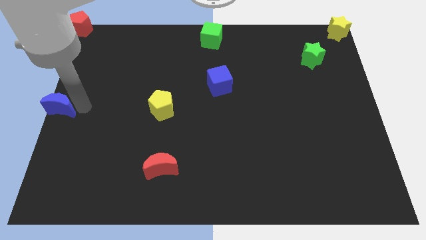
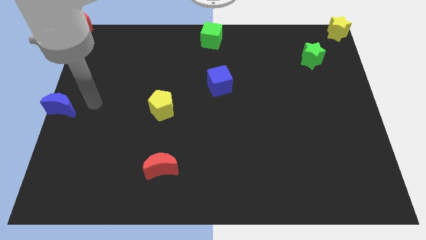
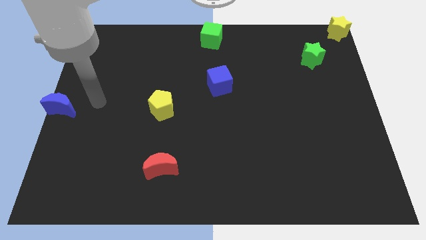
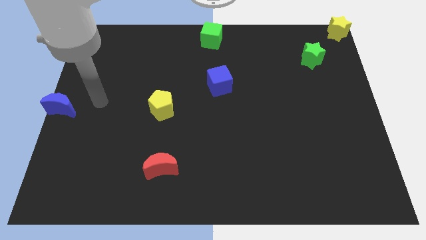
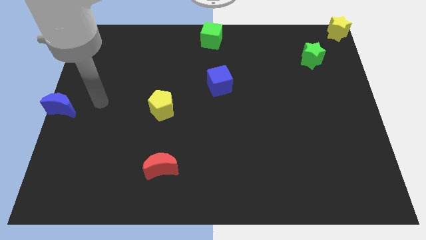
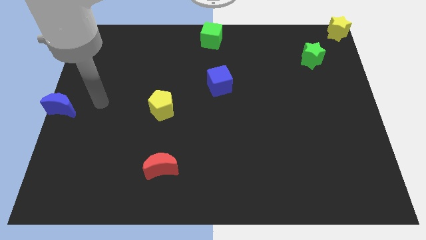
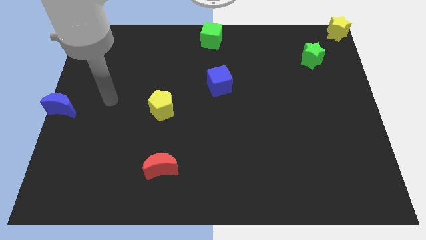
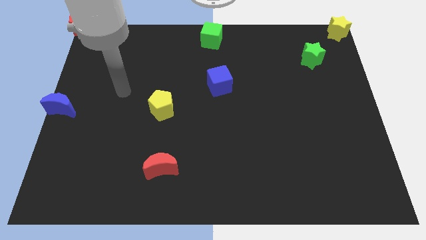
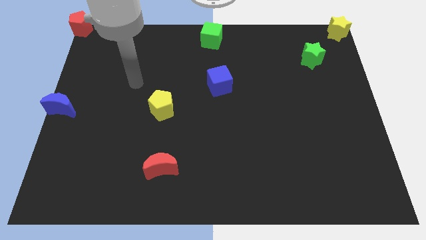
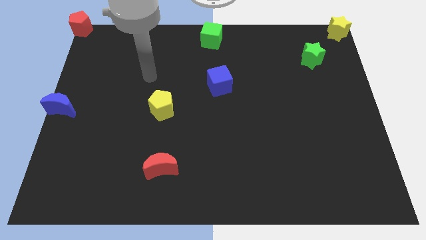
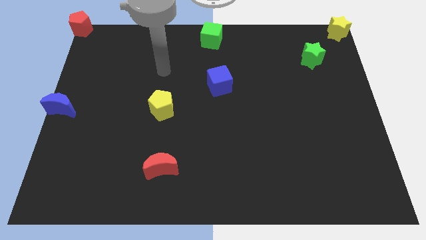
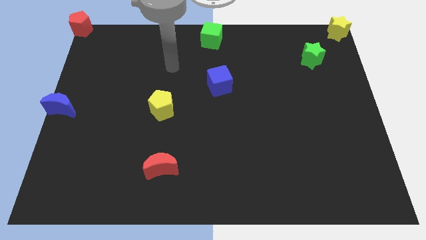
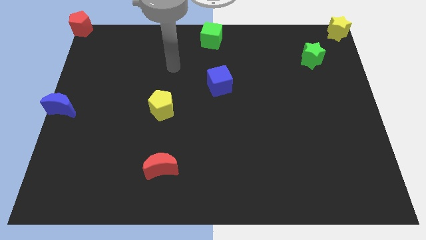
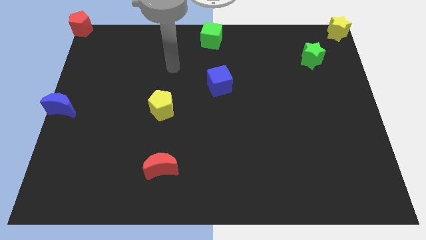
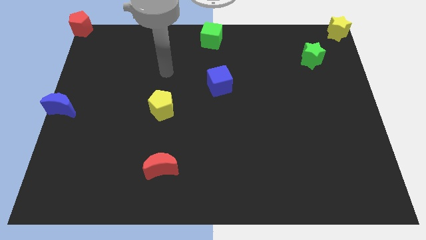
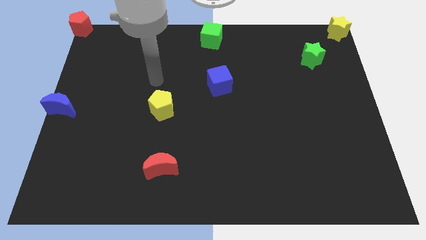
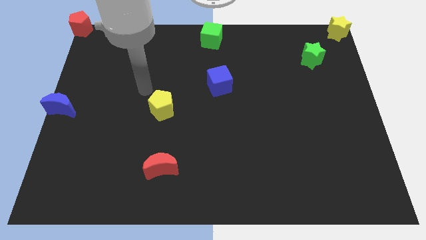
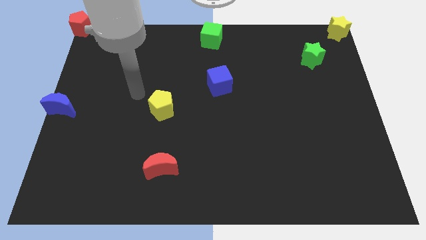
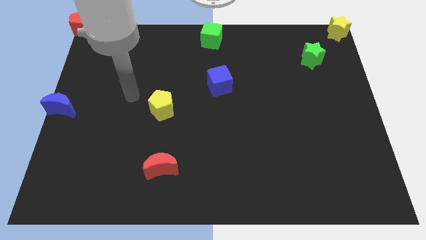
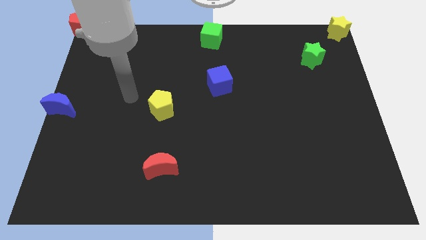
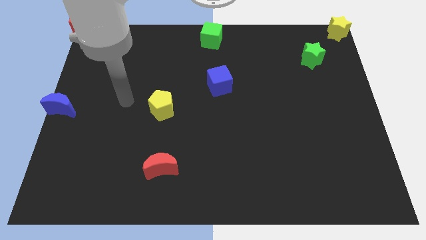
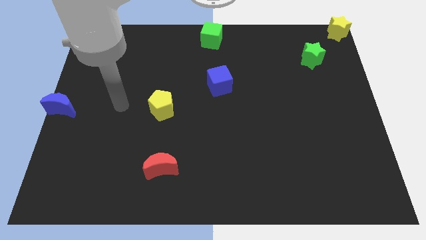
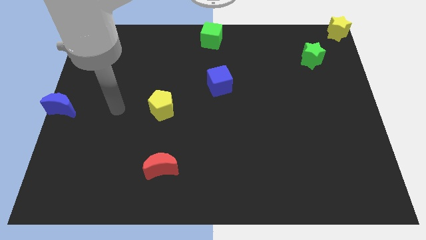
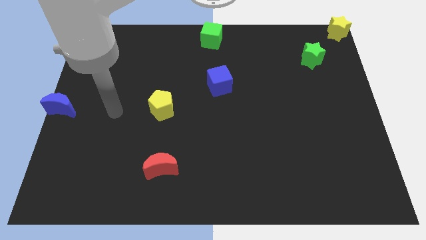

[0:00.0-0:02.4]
move your arm away from the blue crescent

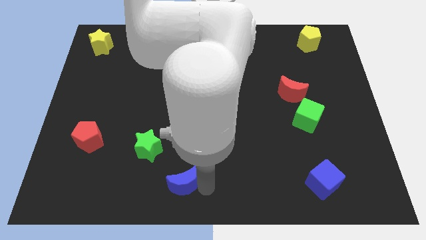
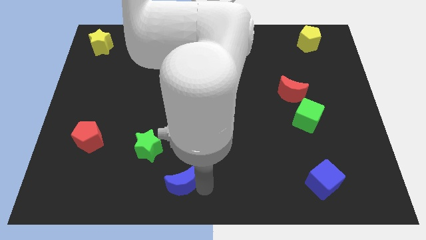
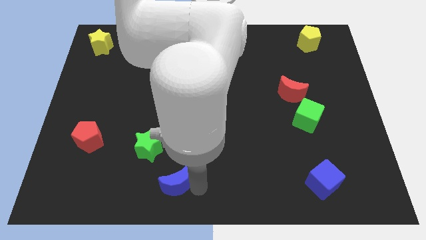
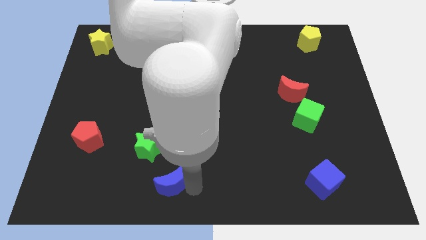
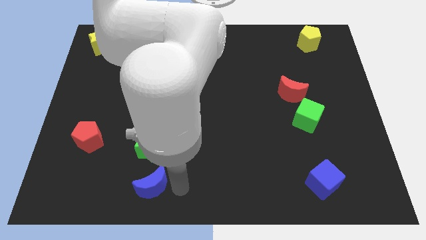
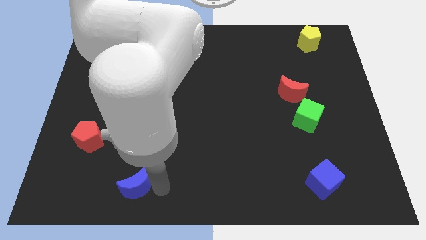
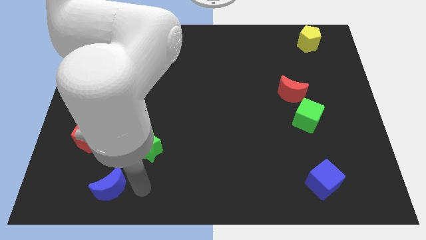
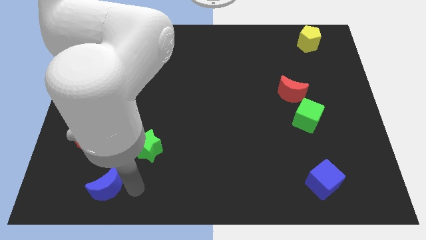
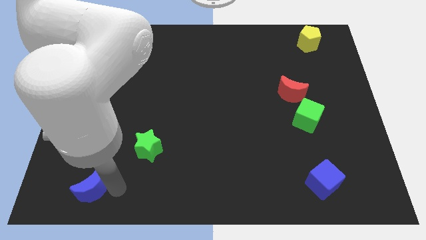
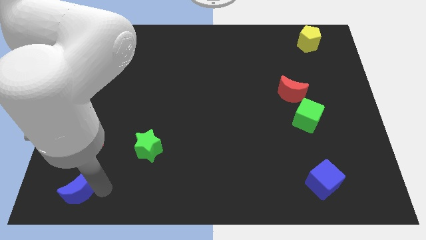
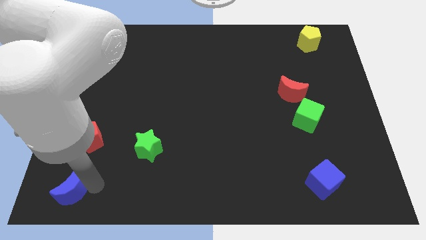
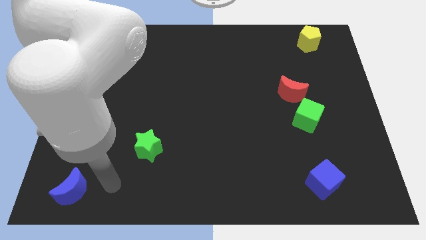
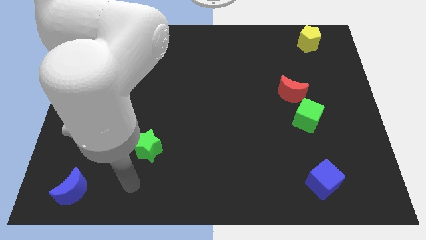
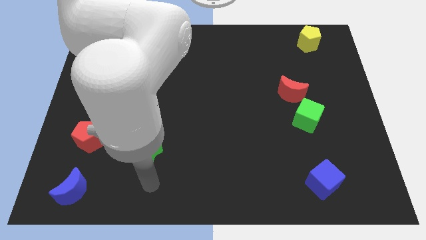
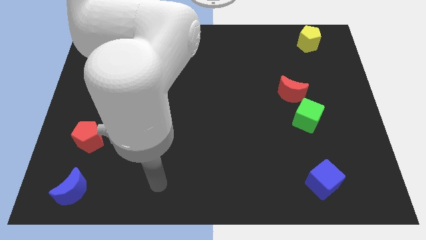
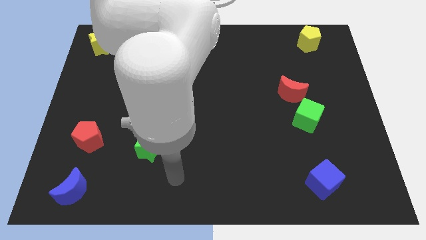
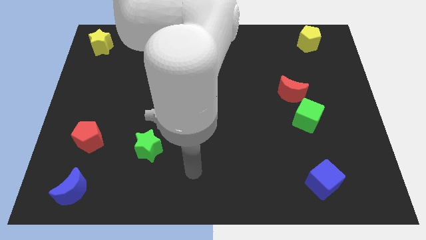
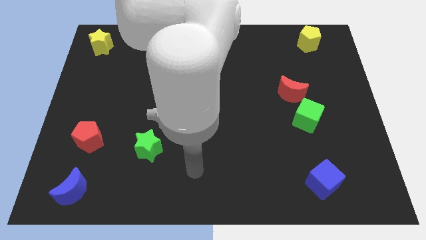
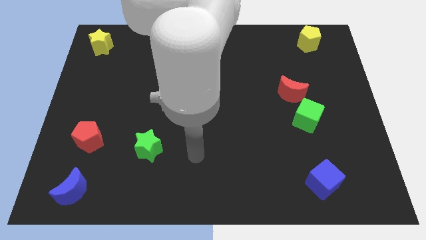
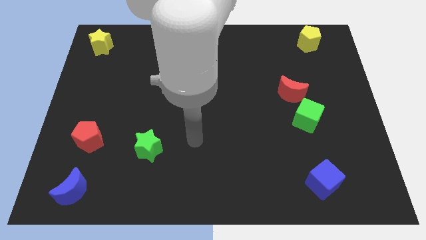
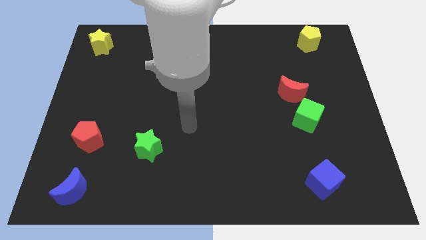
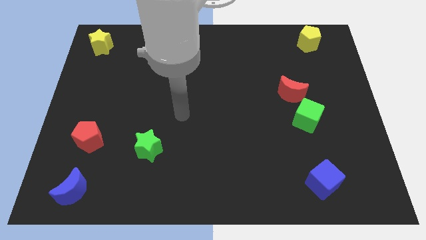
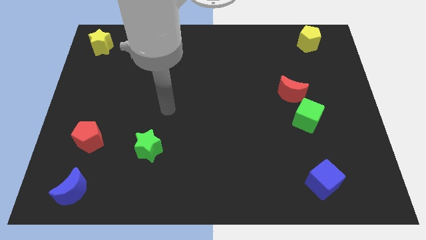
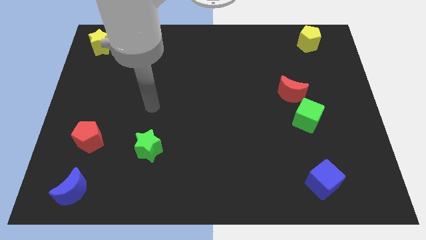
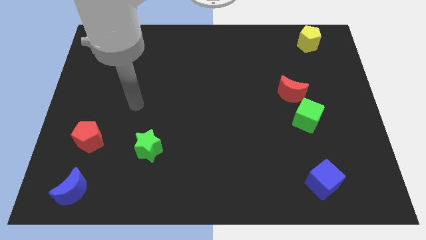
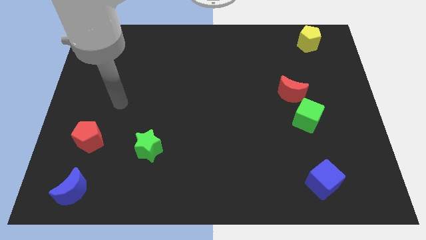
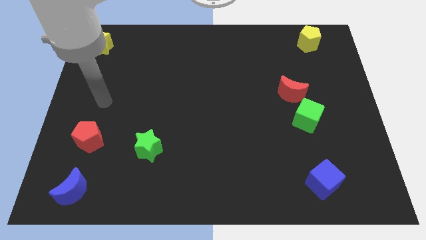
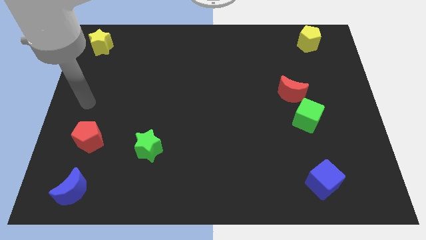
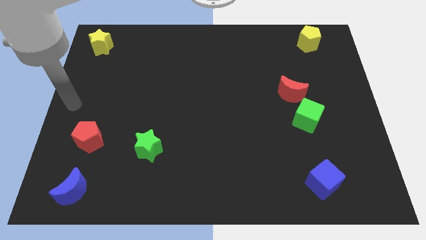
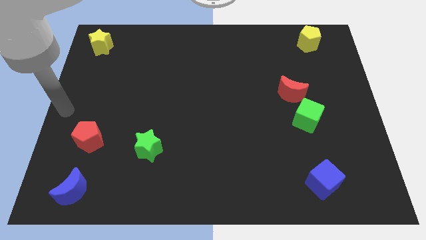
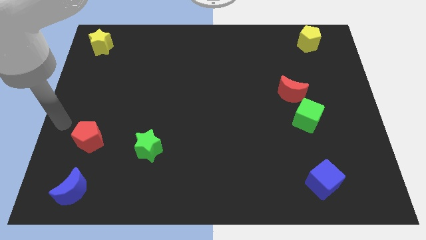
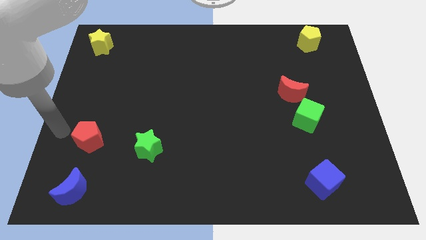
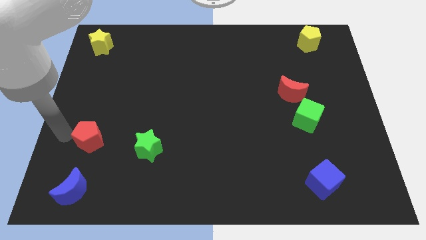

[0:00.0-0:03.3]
place the blue crescent below the red pentagon

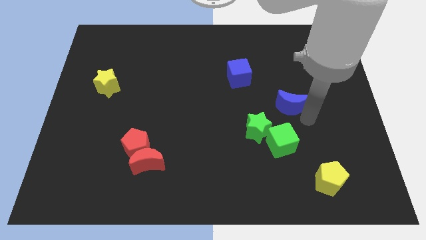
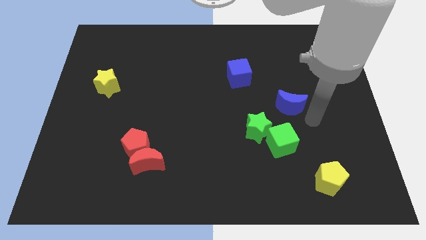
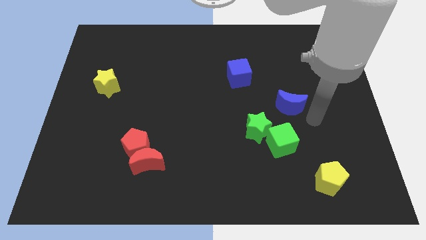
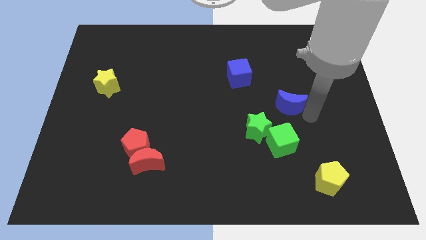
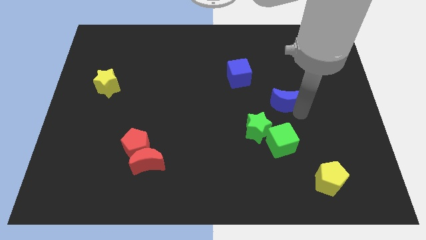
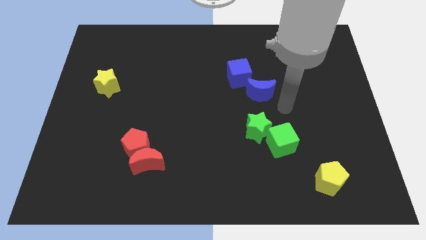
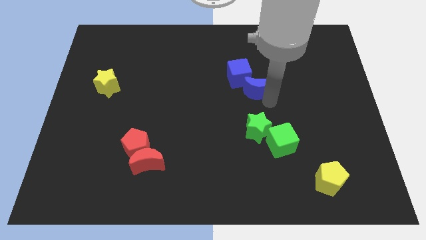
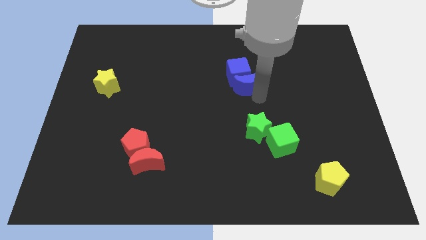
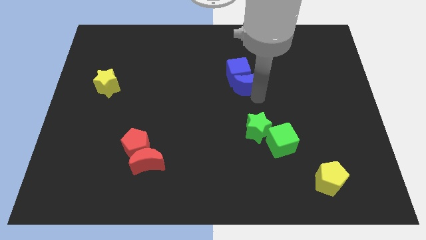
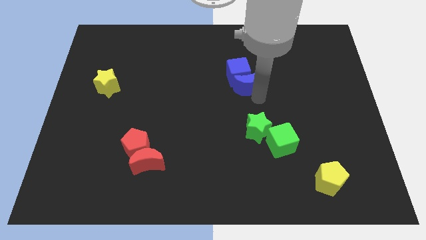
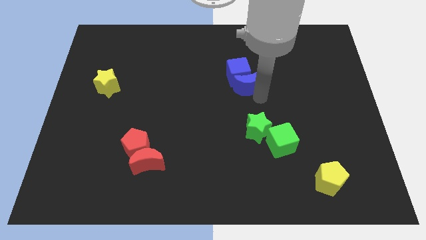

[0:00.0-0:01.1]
push the blue crescent to the bottom of the blue cube

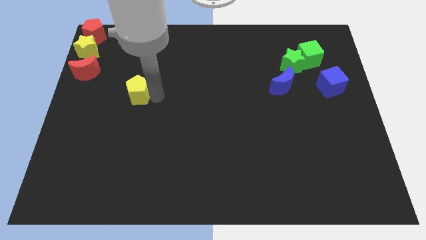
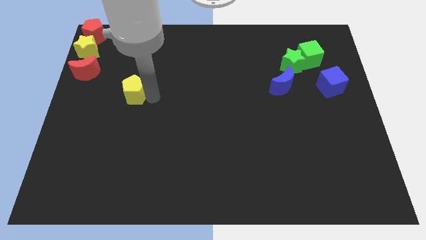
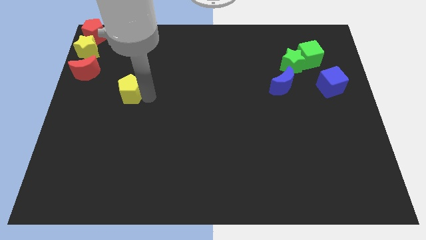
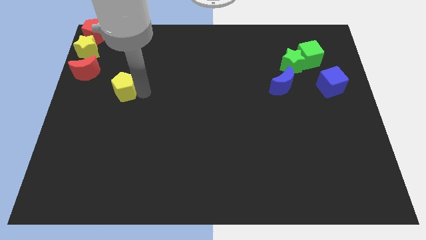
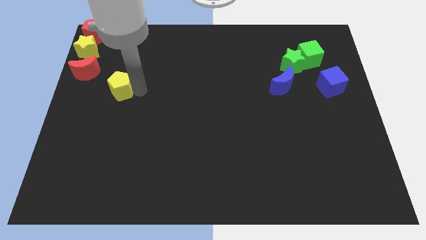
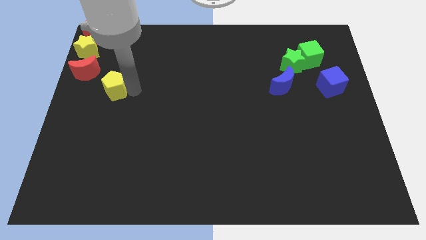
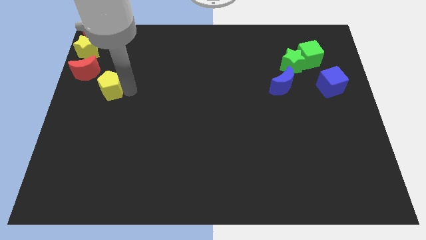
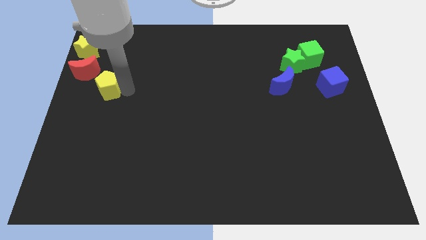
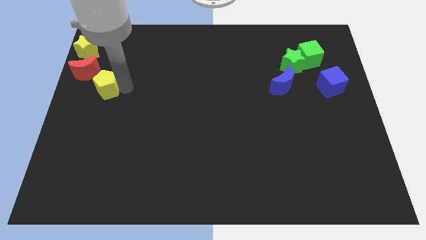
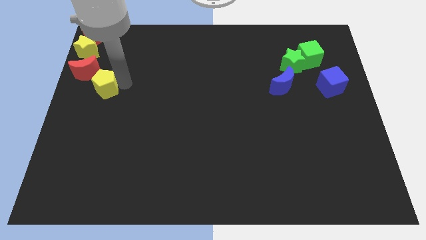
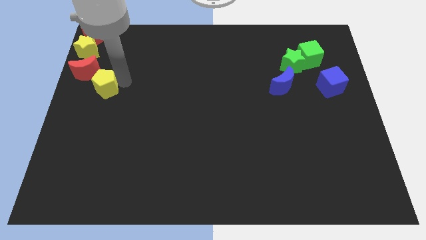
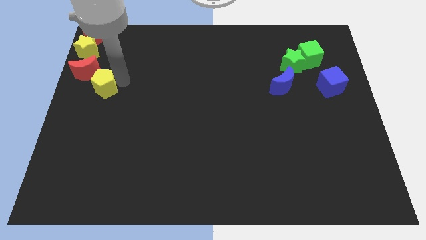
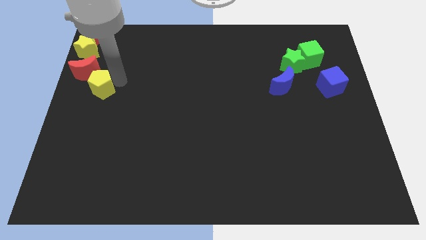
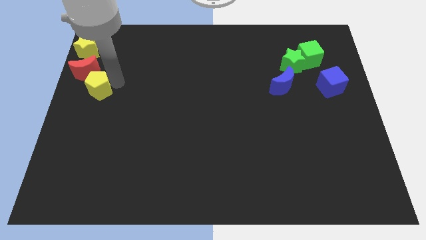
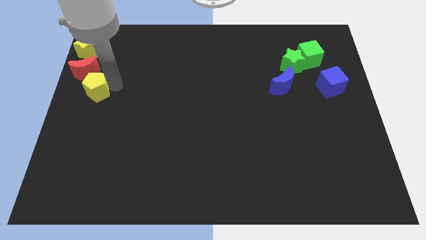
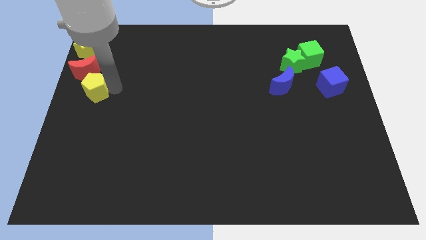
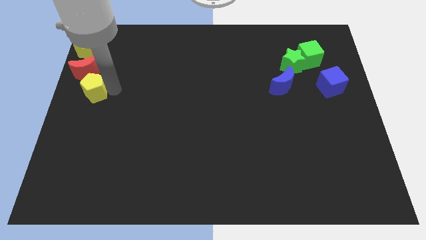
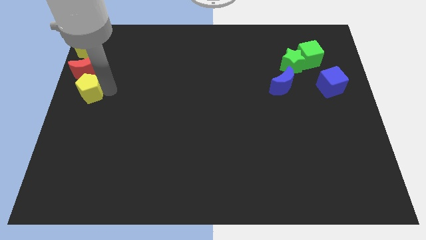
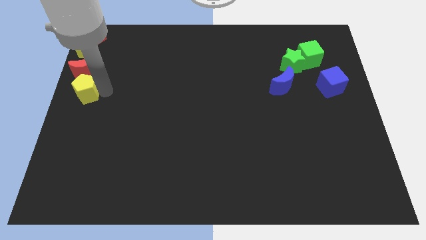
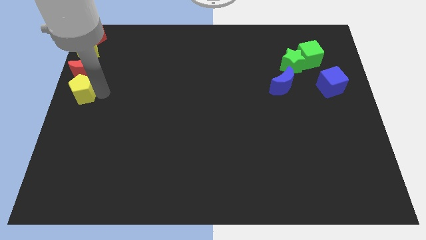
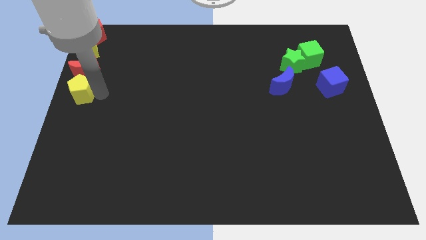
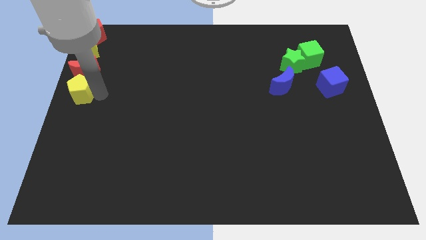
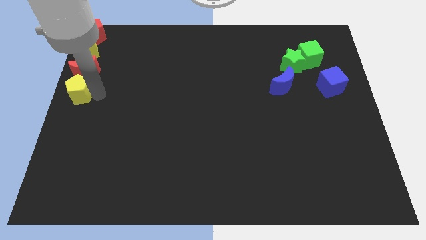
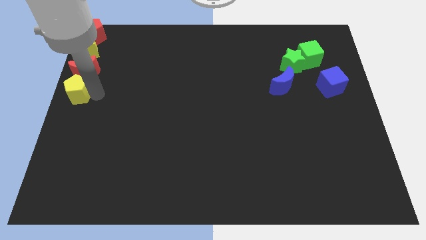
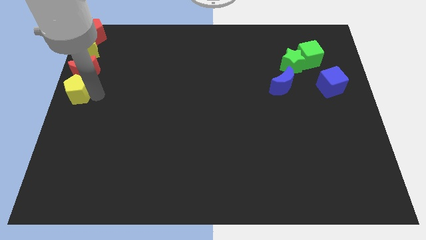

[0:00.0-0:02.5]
move the yellow pentagon below the red moon
